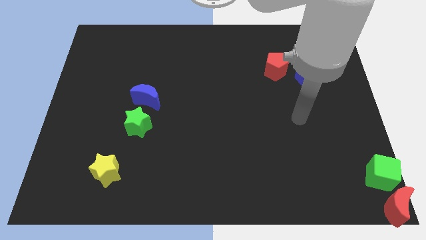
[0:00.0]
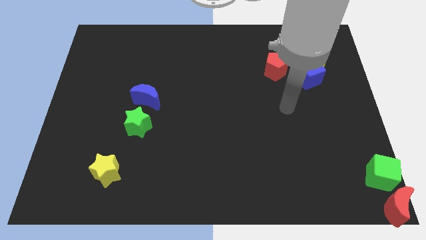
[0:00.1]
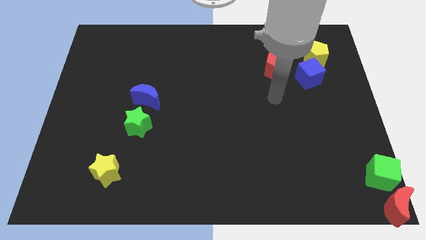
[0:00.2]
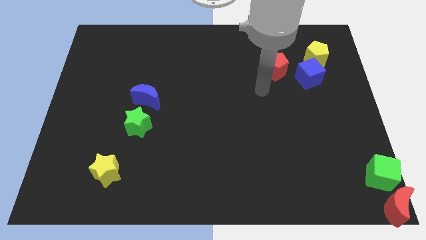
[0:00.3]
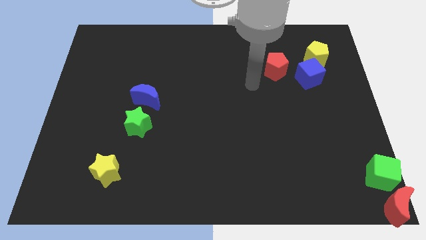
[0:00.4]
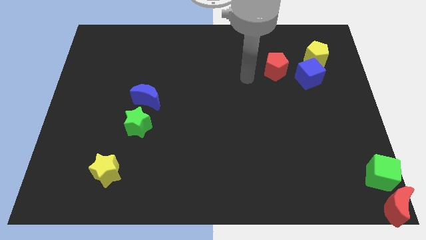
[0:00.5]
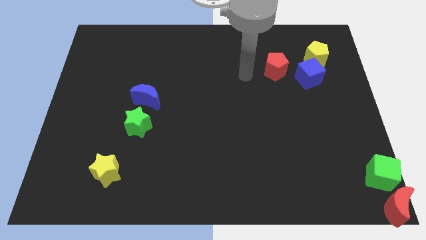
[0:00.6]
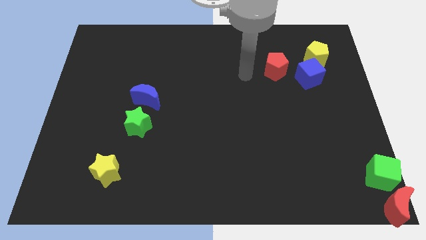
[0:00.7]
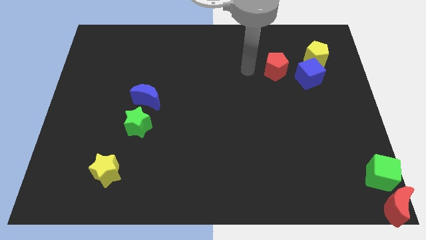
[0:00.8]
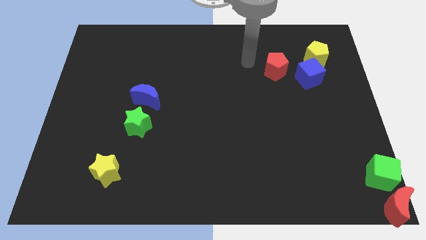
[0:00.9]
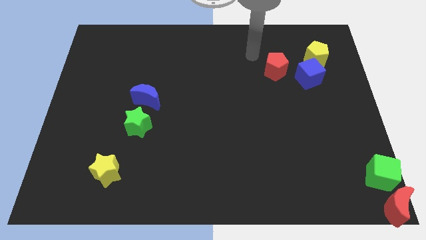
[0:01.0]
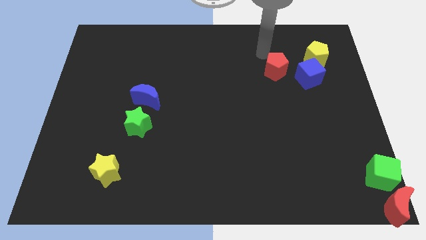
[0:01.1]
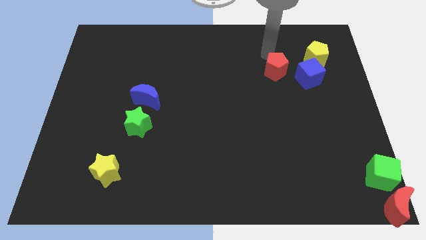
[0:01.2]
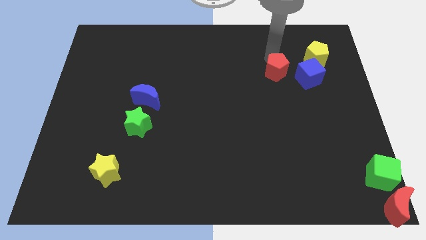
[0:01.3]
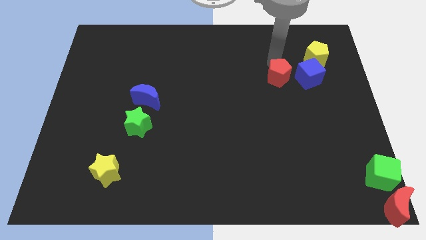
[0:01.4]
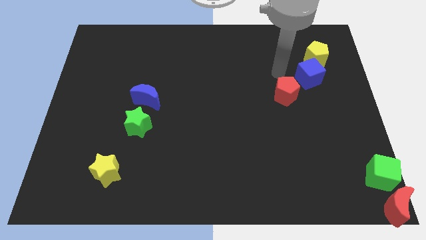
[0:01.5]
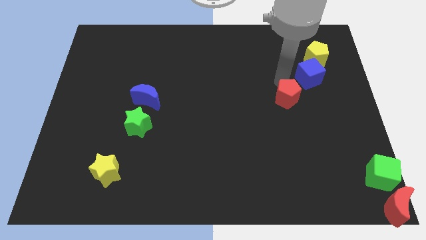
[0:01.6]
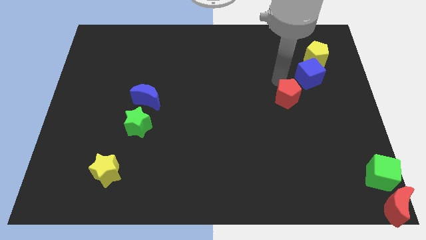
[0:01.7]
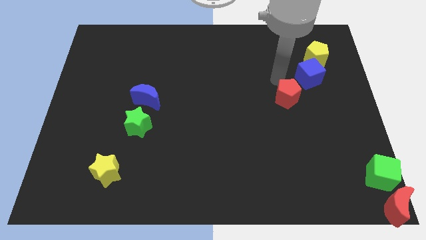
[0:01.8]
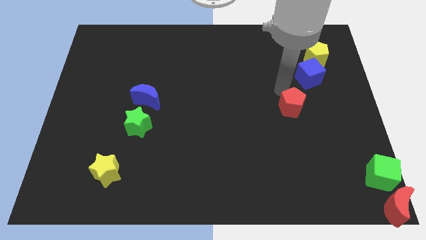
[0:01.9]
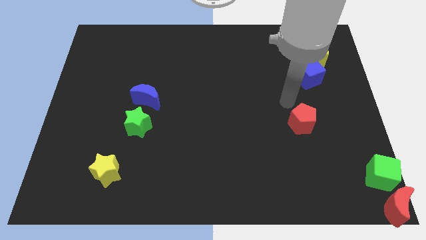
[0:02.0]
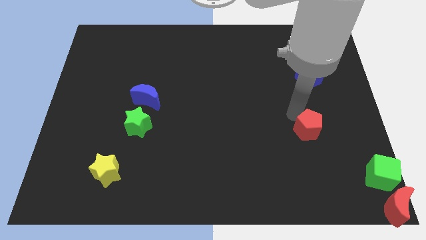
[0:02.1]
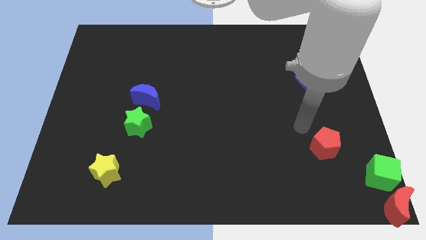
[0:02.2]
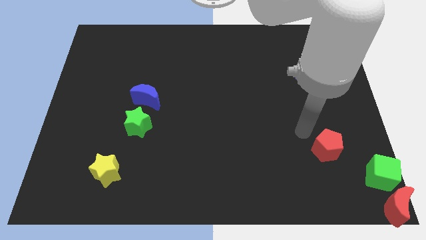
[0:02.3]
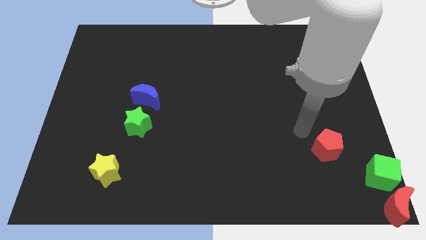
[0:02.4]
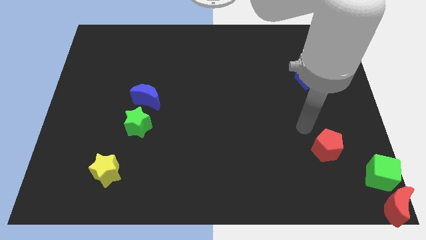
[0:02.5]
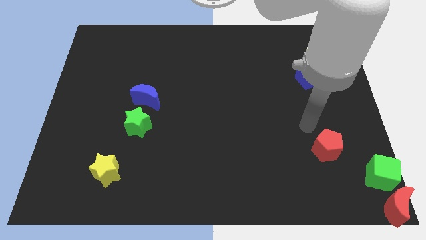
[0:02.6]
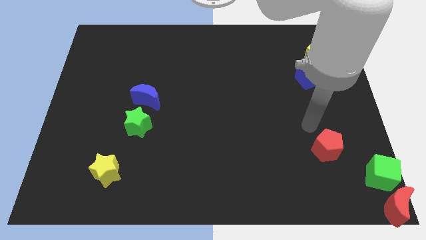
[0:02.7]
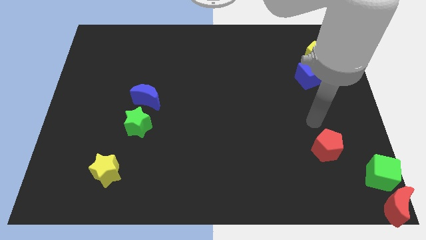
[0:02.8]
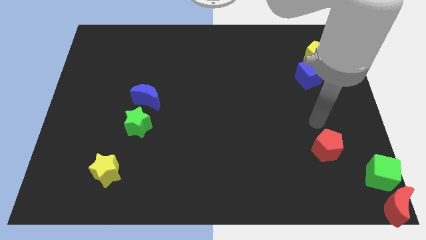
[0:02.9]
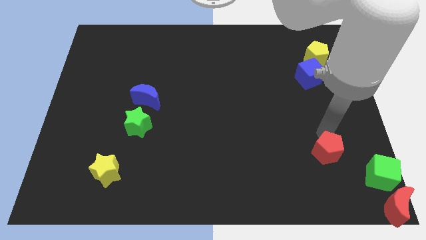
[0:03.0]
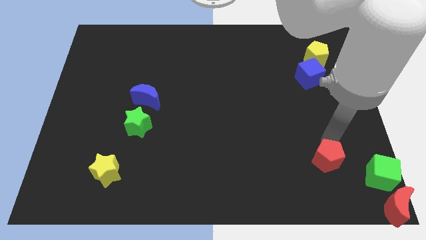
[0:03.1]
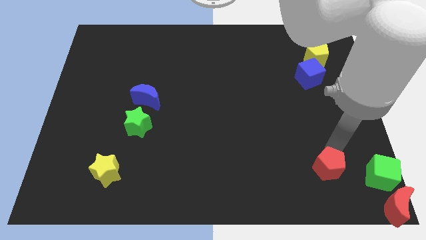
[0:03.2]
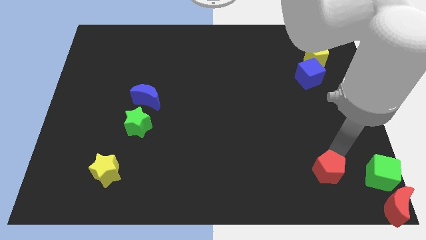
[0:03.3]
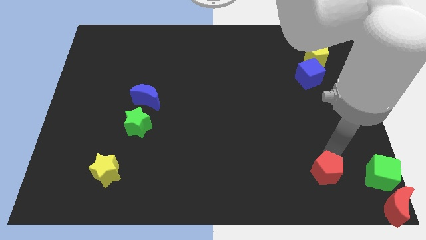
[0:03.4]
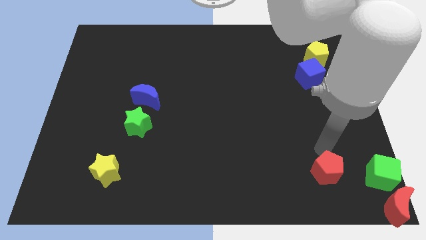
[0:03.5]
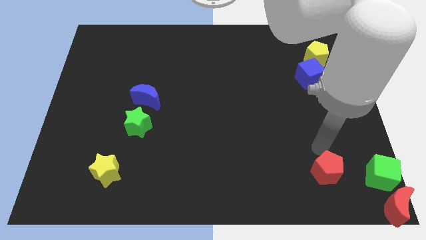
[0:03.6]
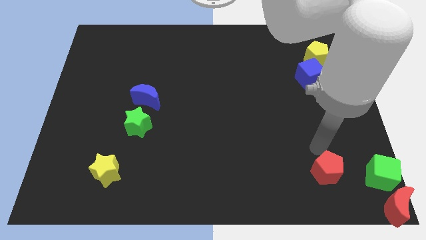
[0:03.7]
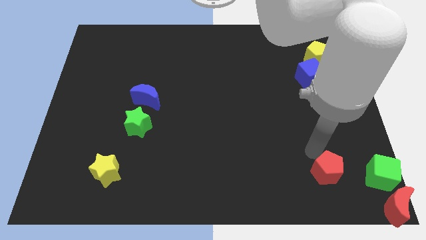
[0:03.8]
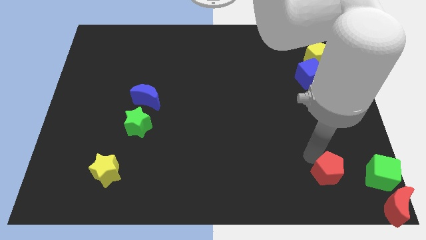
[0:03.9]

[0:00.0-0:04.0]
place the red pentagon left to the green cube

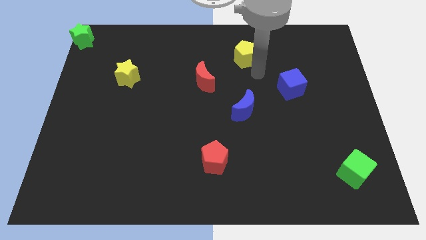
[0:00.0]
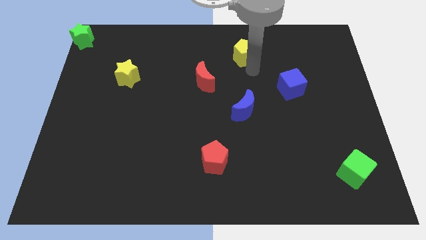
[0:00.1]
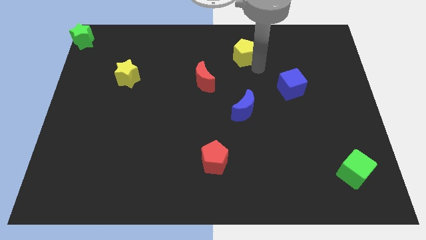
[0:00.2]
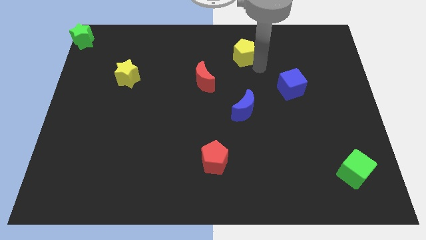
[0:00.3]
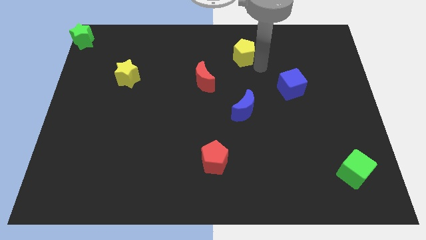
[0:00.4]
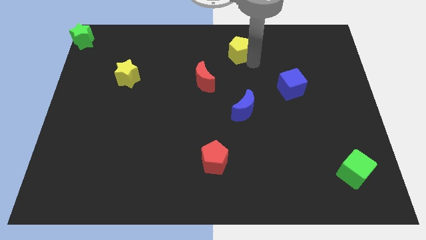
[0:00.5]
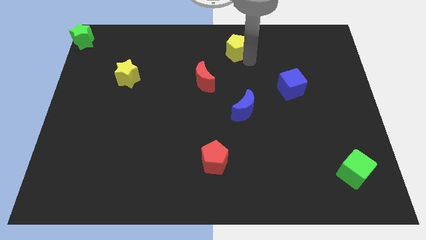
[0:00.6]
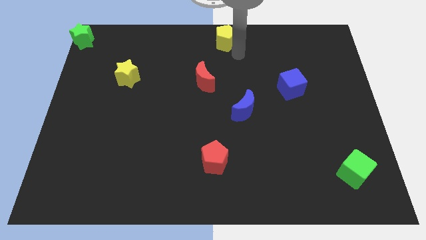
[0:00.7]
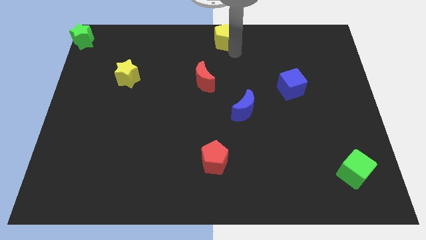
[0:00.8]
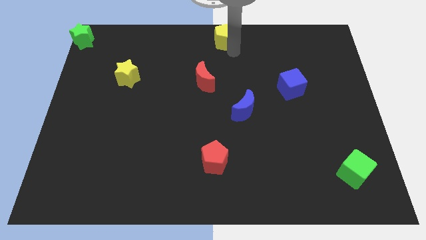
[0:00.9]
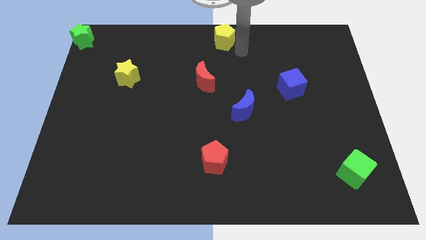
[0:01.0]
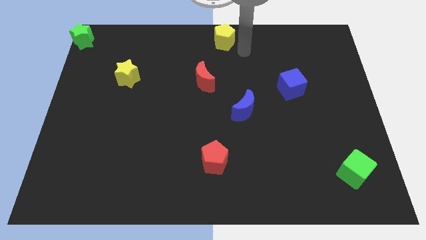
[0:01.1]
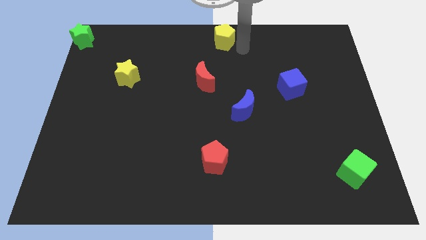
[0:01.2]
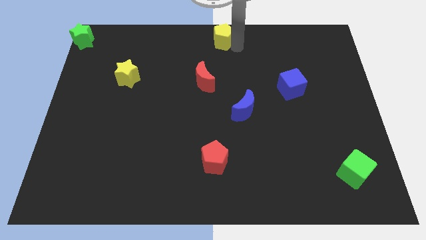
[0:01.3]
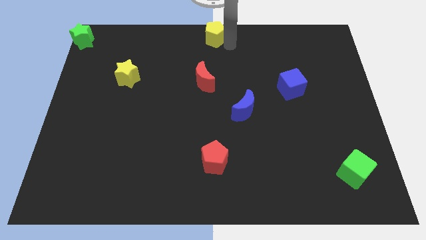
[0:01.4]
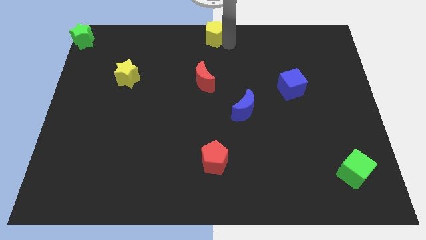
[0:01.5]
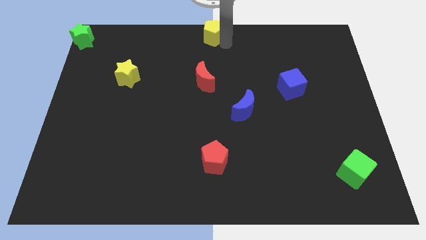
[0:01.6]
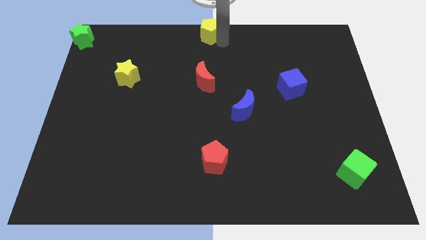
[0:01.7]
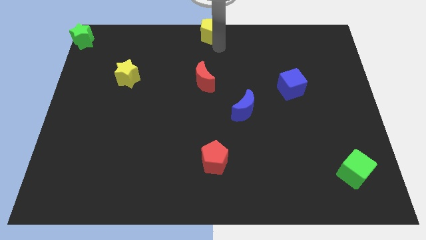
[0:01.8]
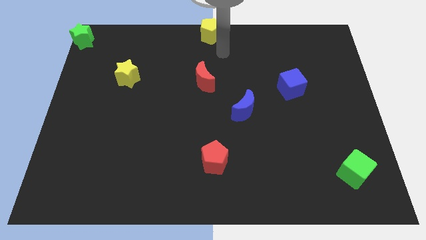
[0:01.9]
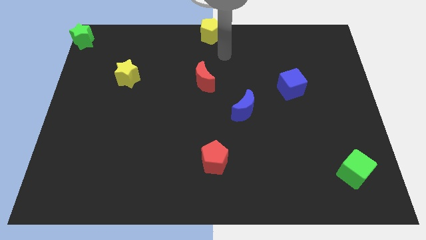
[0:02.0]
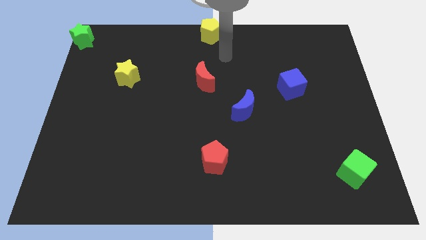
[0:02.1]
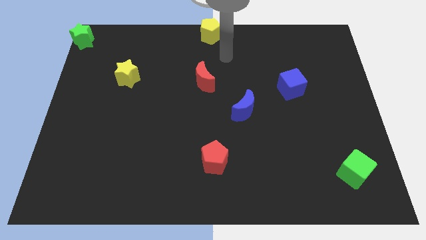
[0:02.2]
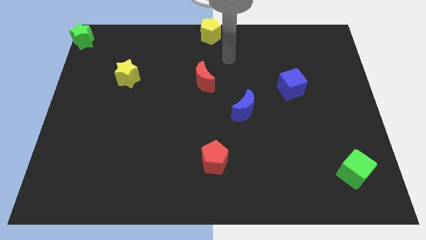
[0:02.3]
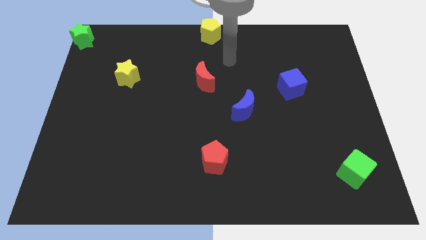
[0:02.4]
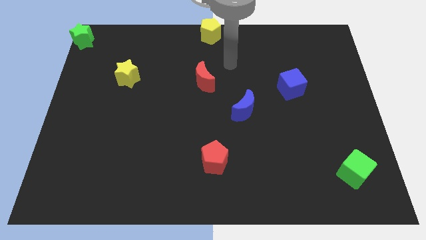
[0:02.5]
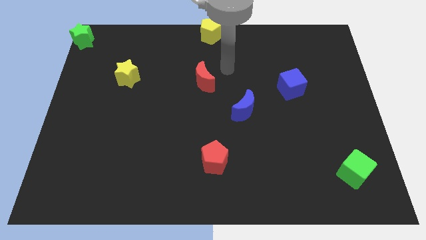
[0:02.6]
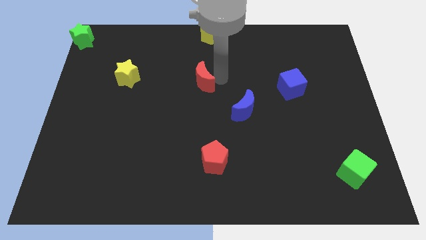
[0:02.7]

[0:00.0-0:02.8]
place the yellow pentagon to the top center of the board

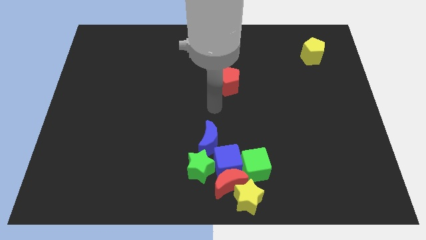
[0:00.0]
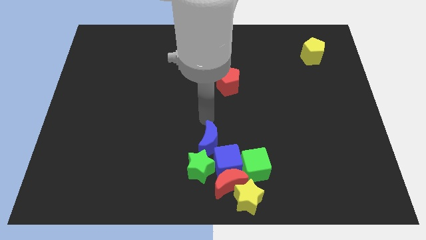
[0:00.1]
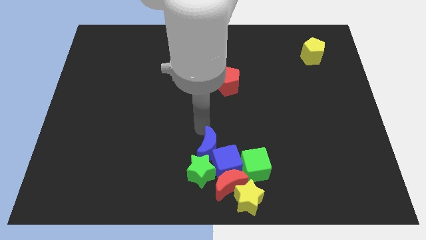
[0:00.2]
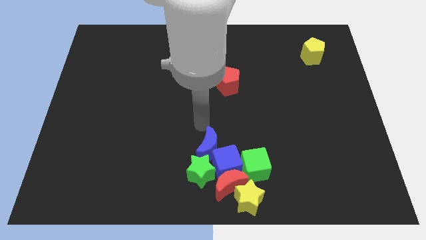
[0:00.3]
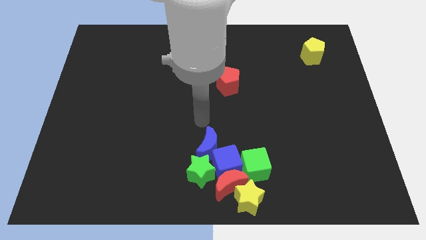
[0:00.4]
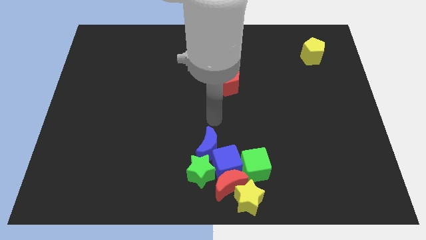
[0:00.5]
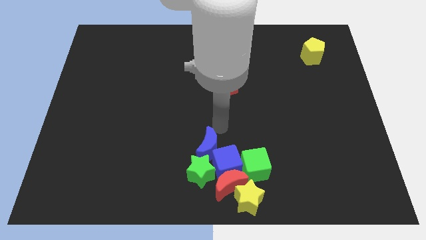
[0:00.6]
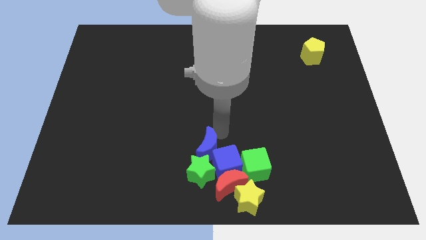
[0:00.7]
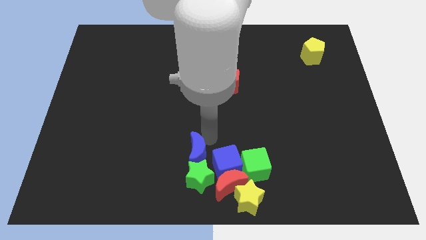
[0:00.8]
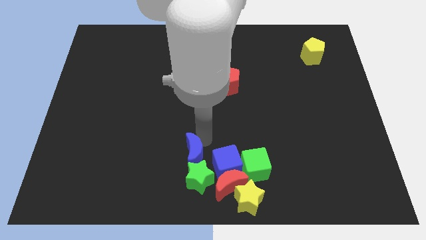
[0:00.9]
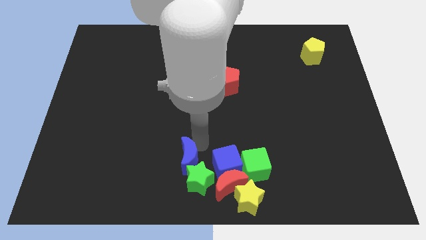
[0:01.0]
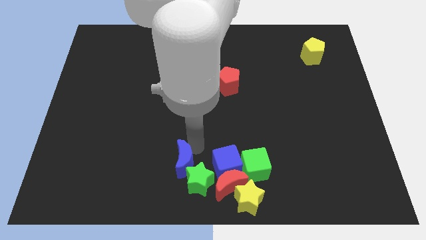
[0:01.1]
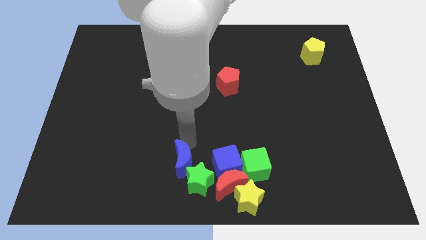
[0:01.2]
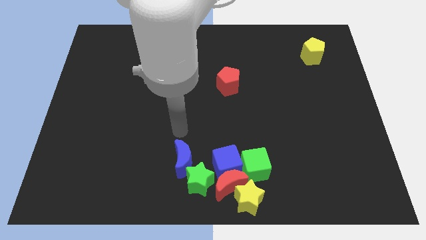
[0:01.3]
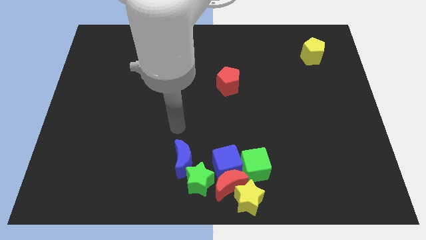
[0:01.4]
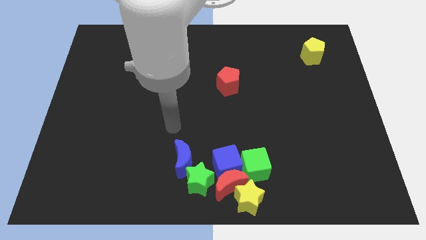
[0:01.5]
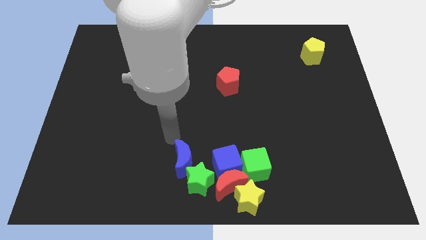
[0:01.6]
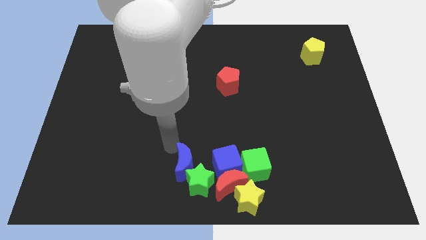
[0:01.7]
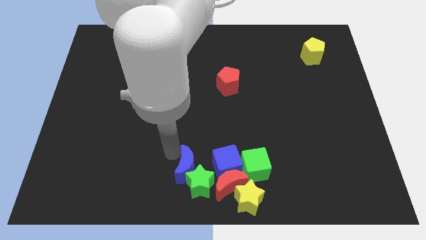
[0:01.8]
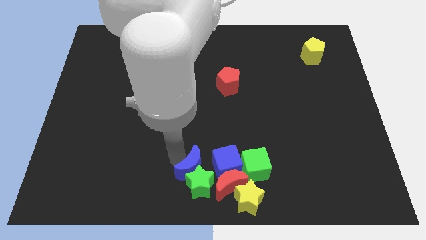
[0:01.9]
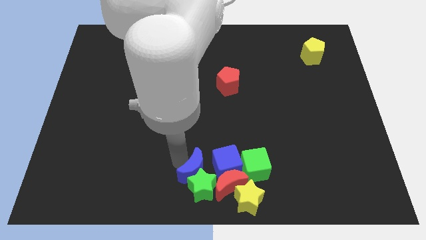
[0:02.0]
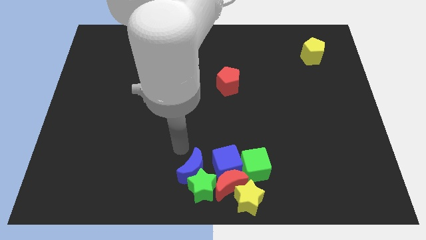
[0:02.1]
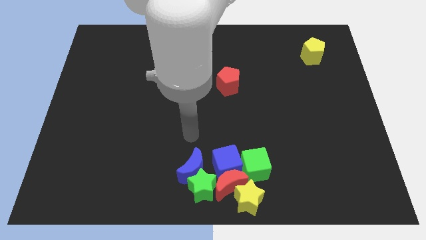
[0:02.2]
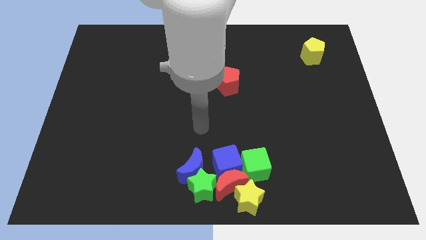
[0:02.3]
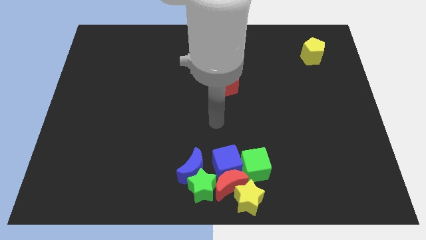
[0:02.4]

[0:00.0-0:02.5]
push the blue crescent into the green star
